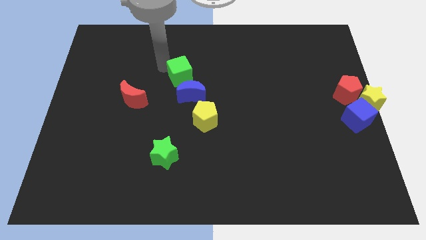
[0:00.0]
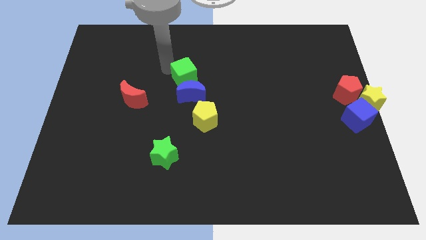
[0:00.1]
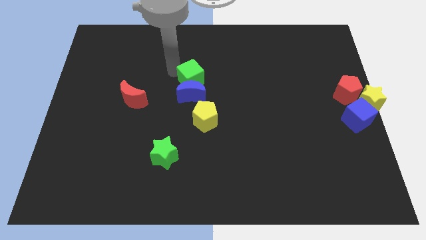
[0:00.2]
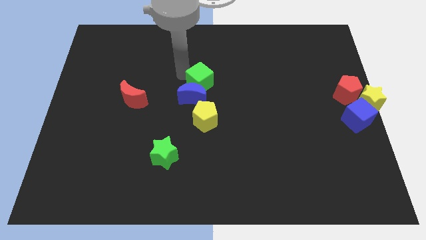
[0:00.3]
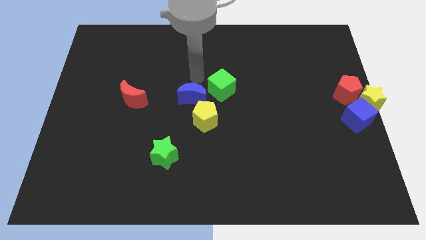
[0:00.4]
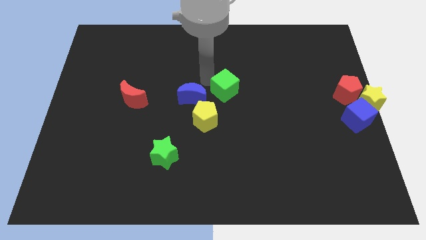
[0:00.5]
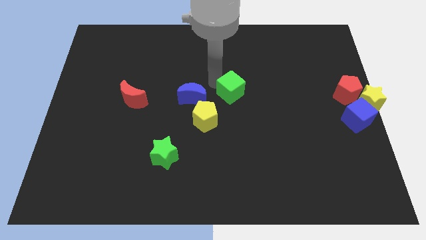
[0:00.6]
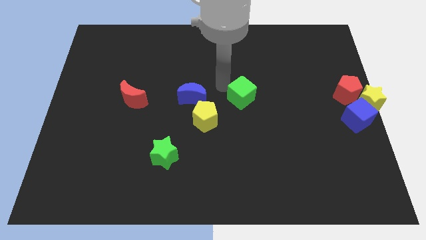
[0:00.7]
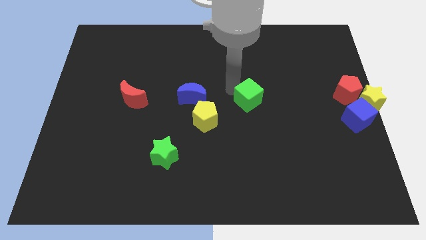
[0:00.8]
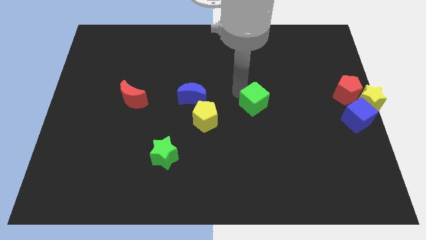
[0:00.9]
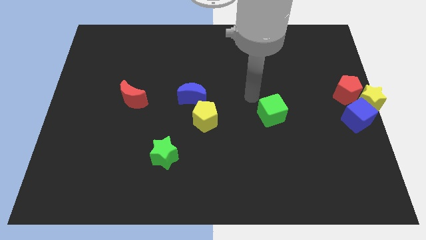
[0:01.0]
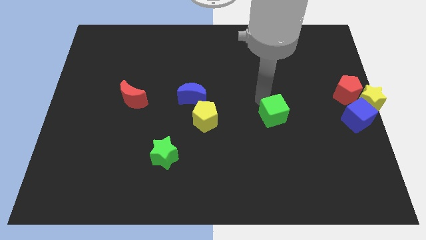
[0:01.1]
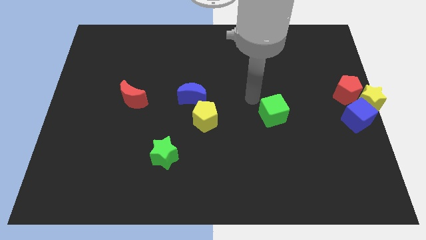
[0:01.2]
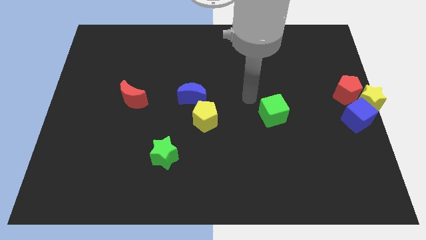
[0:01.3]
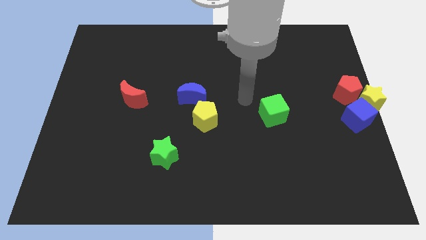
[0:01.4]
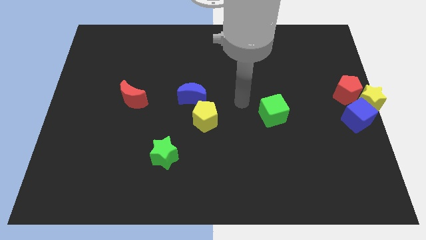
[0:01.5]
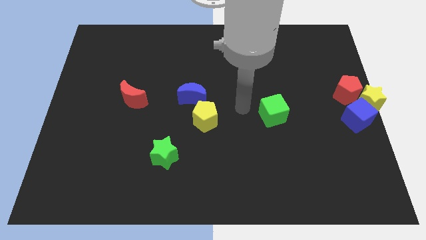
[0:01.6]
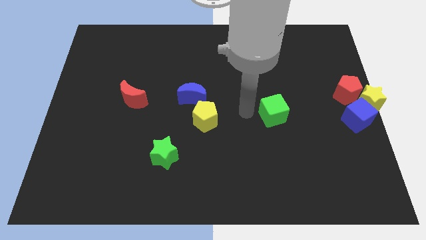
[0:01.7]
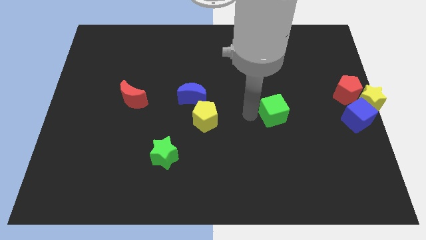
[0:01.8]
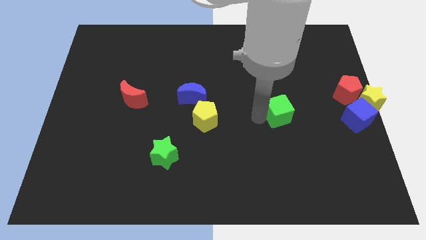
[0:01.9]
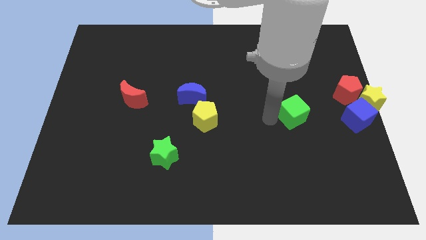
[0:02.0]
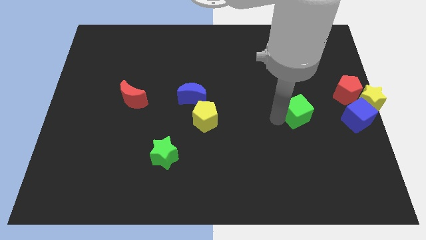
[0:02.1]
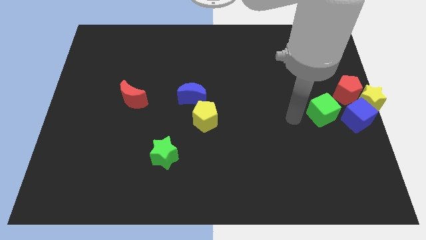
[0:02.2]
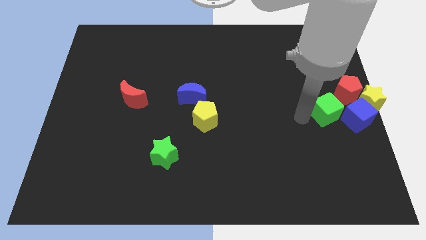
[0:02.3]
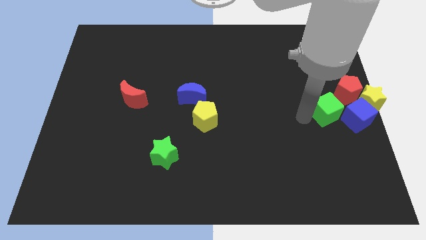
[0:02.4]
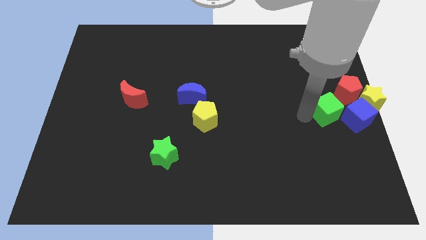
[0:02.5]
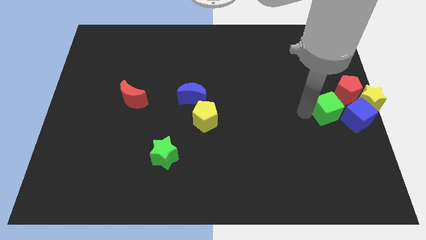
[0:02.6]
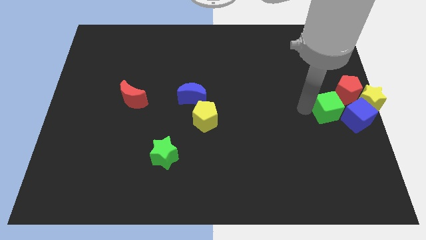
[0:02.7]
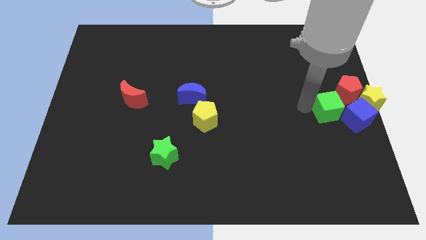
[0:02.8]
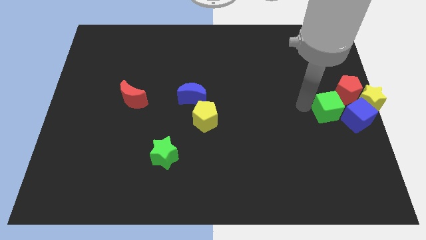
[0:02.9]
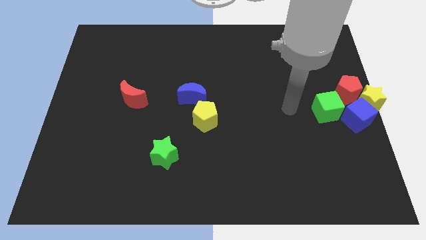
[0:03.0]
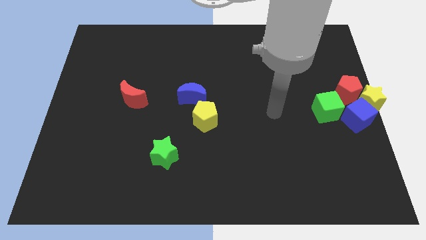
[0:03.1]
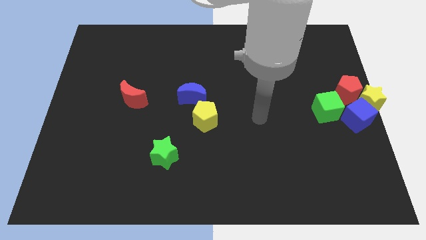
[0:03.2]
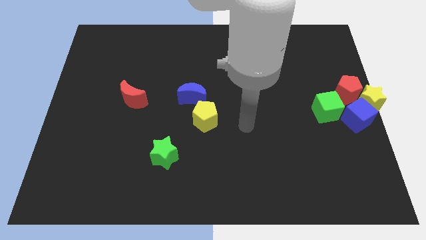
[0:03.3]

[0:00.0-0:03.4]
slide the green cube towards the blue cube

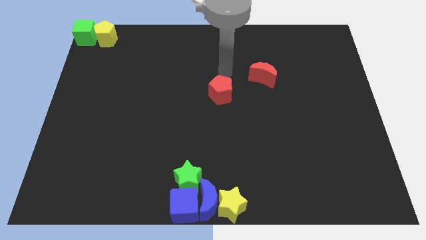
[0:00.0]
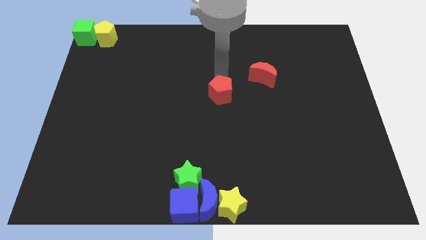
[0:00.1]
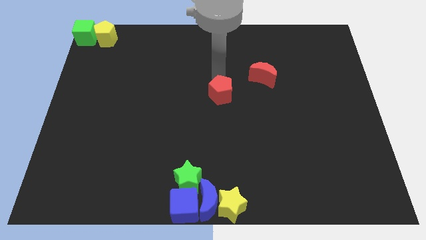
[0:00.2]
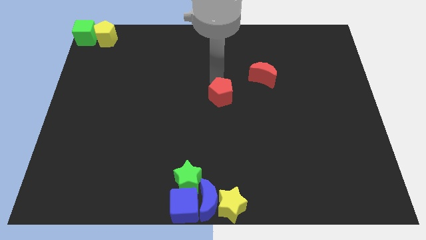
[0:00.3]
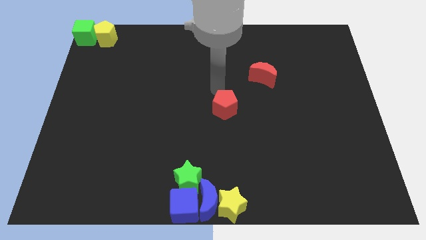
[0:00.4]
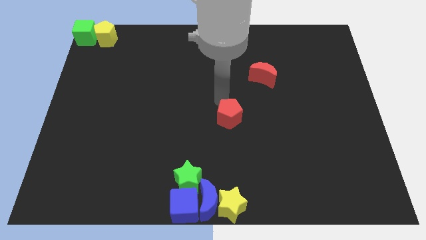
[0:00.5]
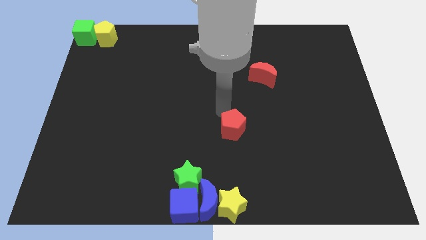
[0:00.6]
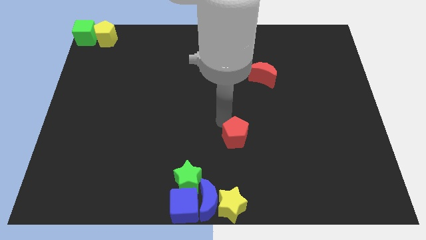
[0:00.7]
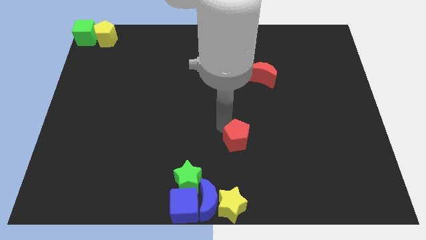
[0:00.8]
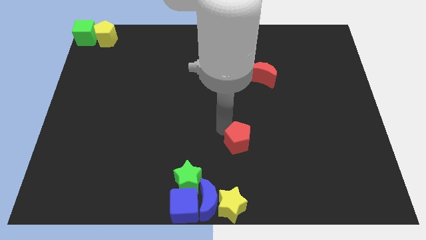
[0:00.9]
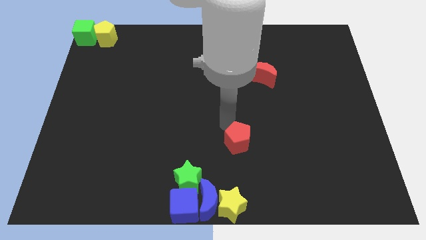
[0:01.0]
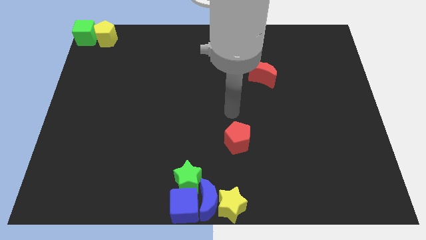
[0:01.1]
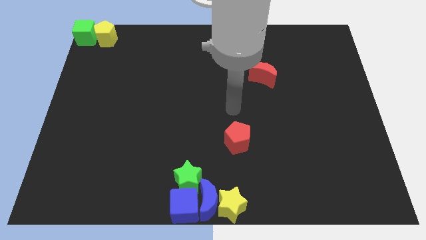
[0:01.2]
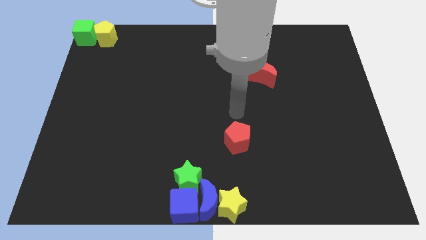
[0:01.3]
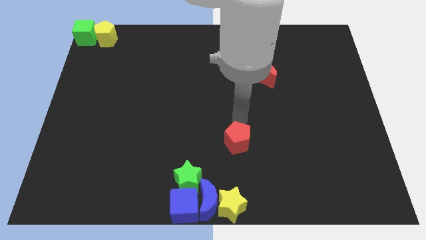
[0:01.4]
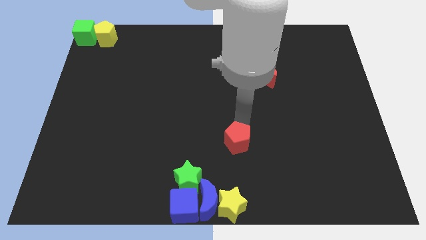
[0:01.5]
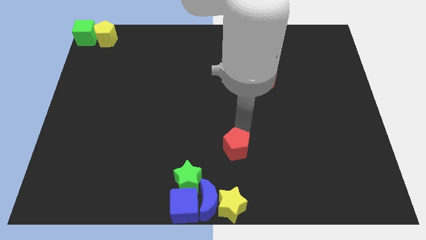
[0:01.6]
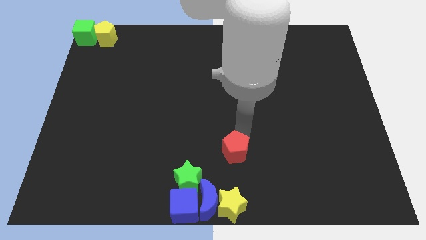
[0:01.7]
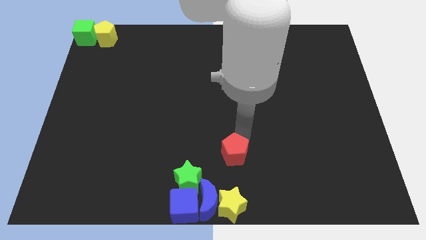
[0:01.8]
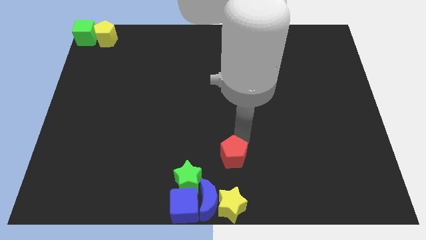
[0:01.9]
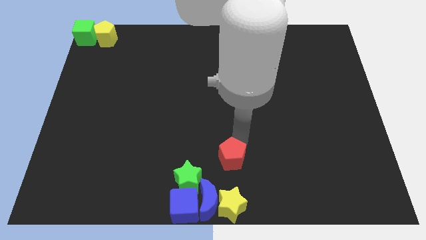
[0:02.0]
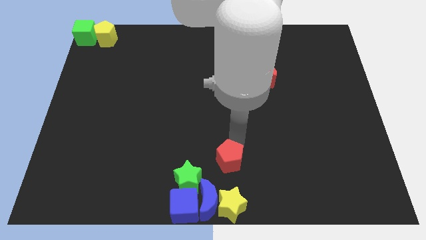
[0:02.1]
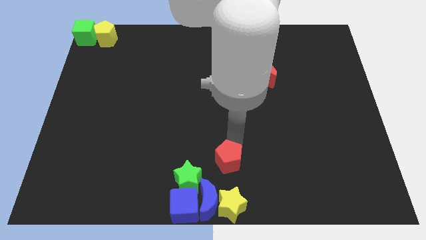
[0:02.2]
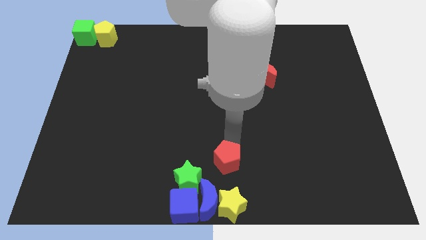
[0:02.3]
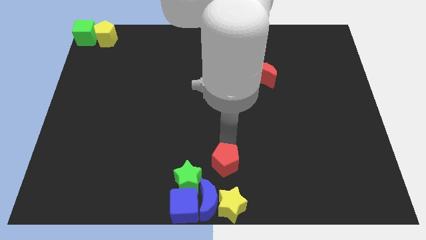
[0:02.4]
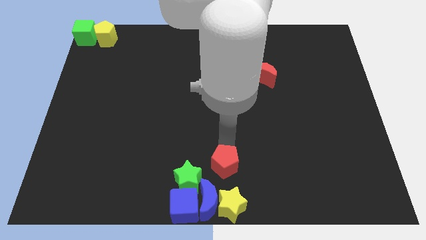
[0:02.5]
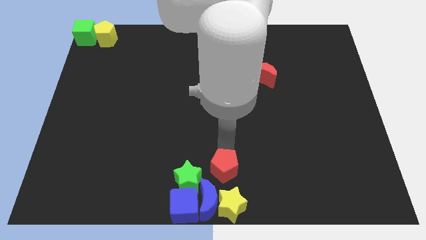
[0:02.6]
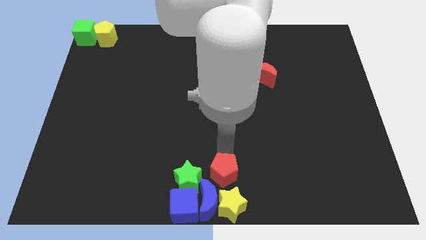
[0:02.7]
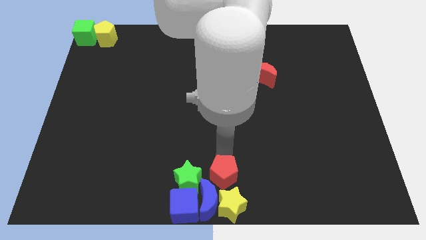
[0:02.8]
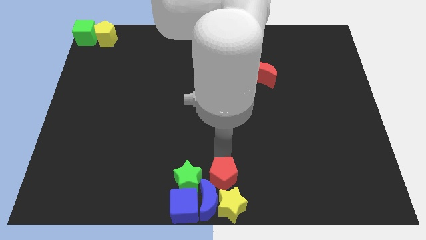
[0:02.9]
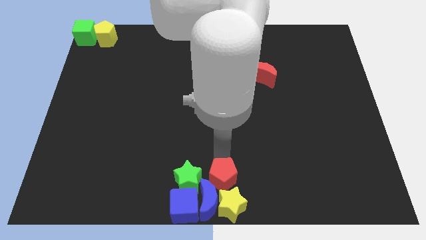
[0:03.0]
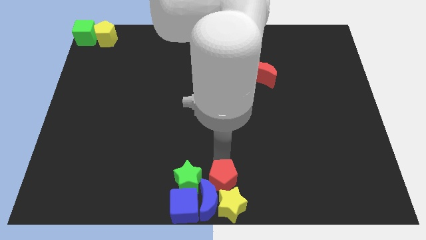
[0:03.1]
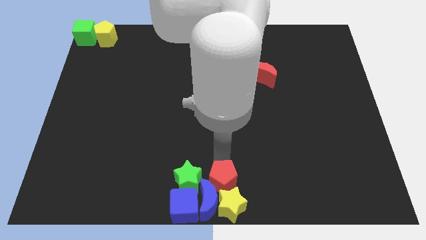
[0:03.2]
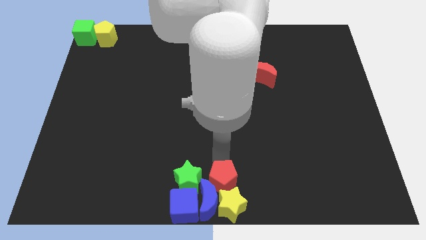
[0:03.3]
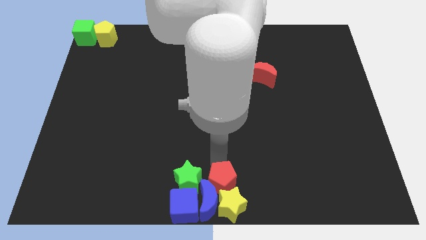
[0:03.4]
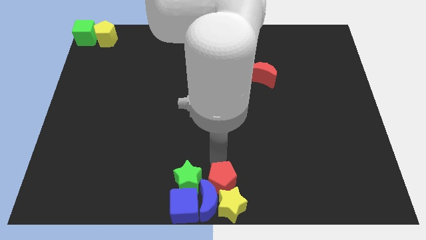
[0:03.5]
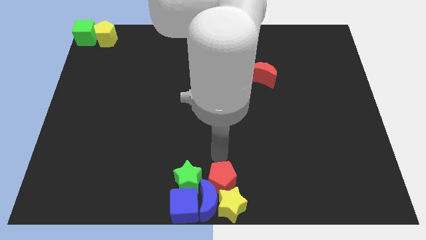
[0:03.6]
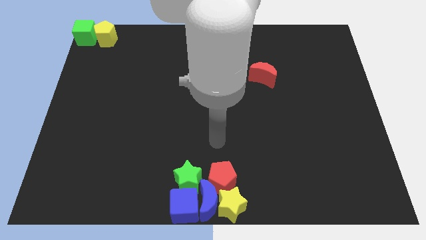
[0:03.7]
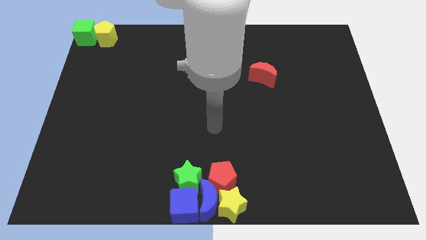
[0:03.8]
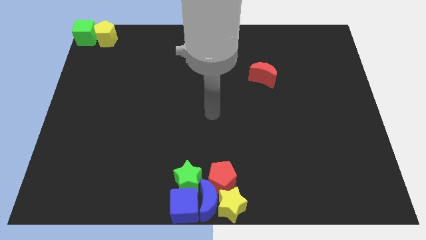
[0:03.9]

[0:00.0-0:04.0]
place the red pentagon into the yellow star and blue moon

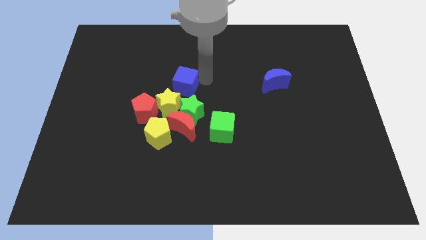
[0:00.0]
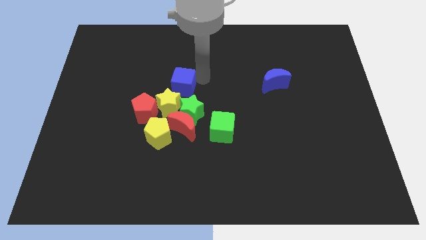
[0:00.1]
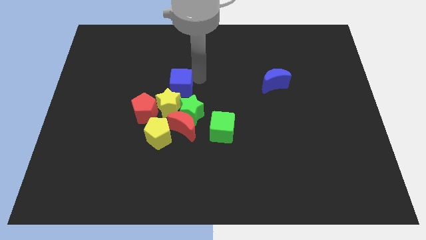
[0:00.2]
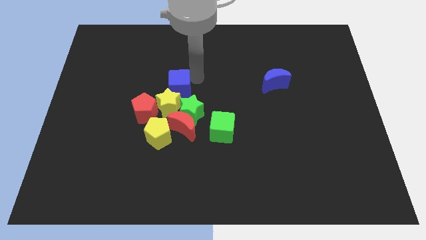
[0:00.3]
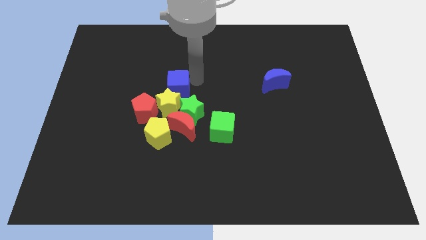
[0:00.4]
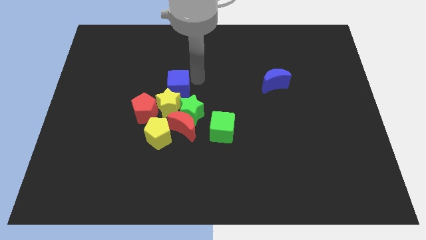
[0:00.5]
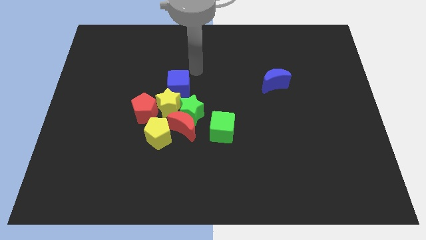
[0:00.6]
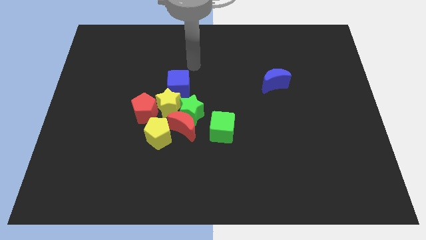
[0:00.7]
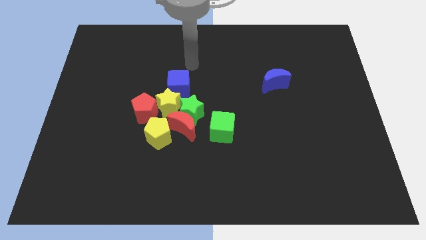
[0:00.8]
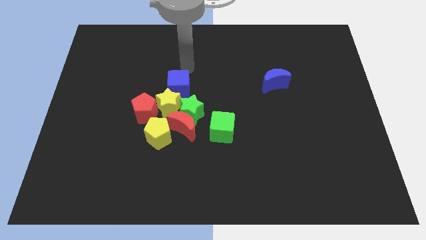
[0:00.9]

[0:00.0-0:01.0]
place the yellow star towards the top right side of the yellow star

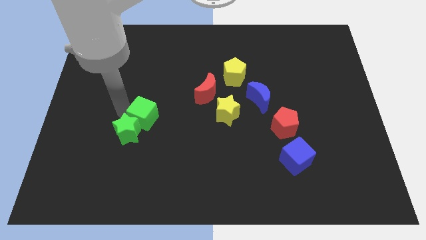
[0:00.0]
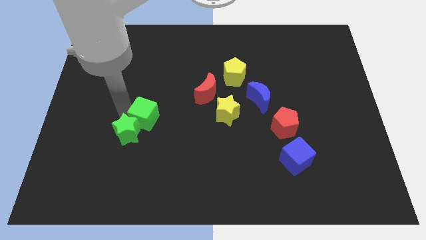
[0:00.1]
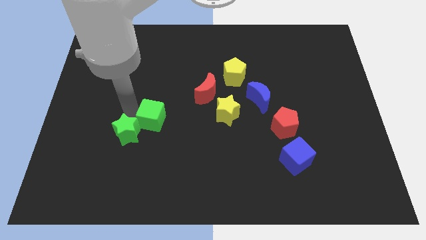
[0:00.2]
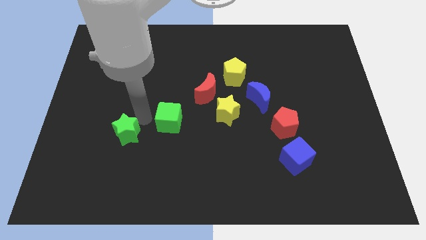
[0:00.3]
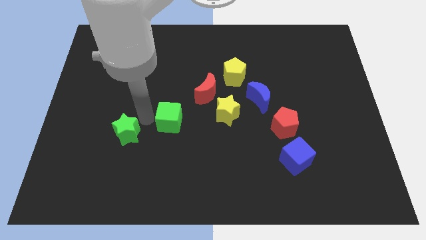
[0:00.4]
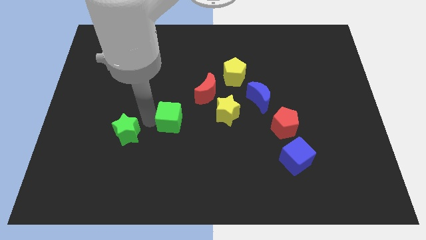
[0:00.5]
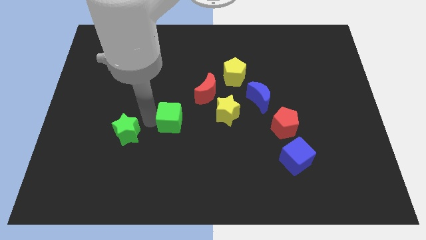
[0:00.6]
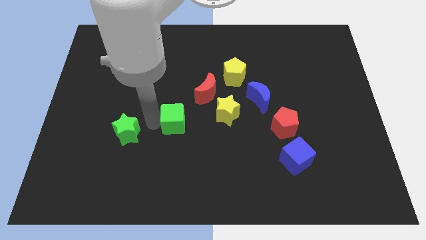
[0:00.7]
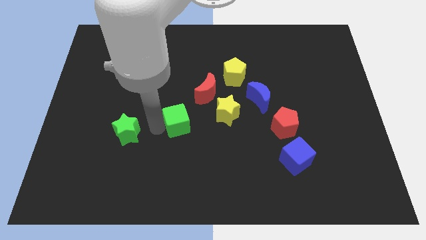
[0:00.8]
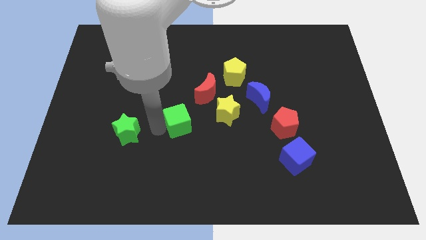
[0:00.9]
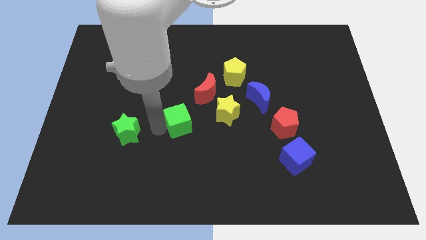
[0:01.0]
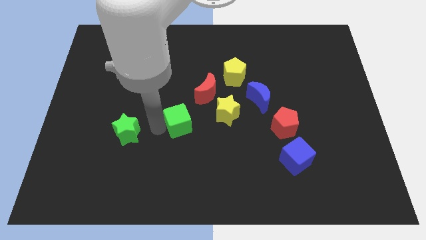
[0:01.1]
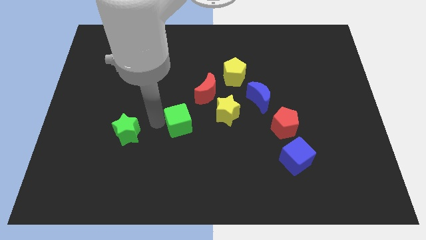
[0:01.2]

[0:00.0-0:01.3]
separate green star and green cube
